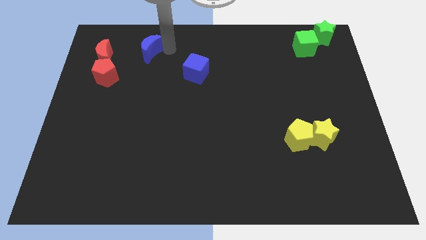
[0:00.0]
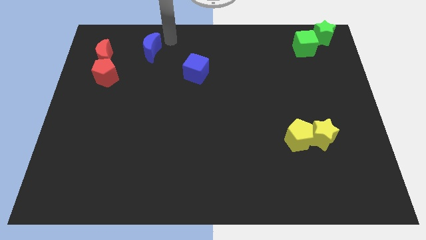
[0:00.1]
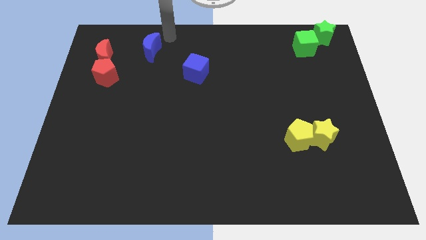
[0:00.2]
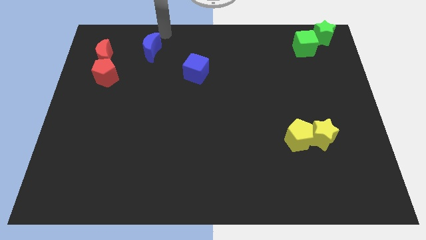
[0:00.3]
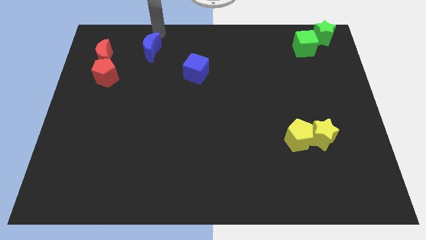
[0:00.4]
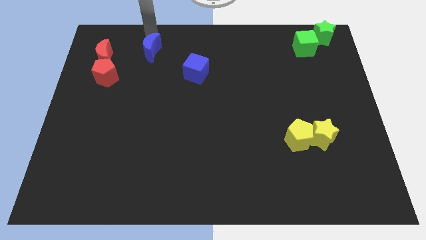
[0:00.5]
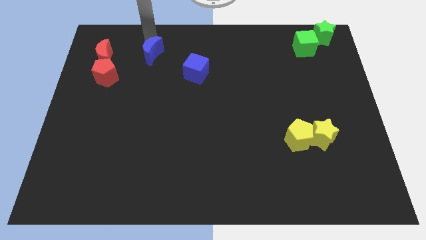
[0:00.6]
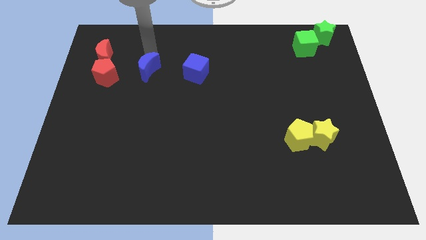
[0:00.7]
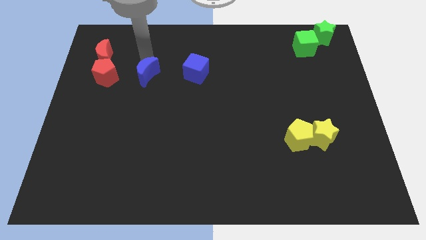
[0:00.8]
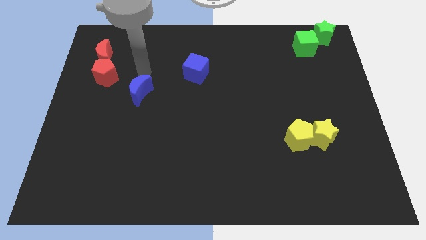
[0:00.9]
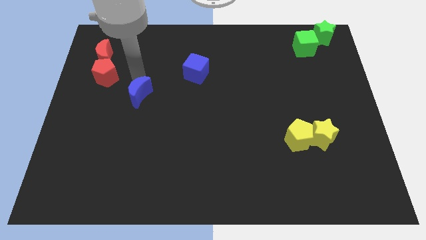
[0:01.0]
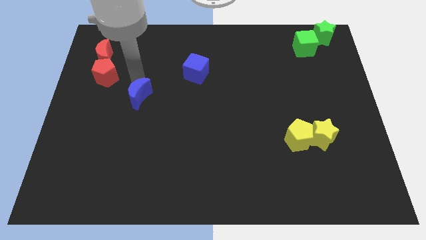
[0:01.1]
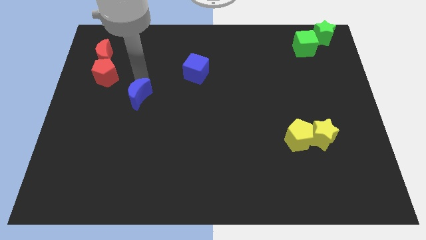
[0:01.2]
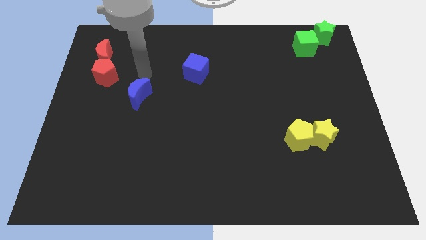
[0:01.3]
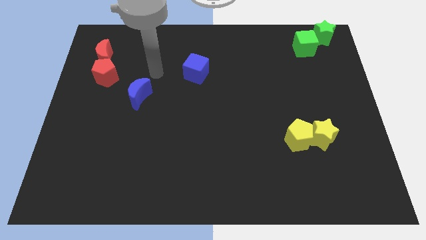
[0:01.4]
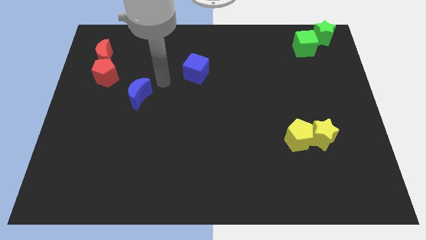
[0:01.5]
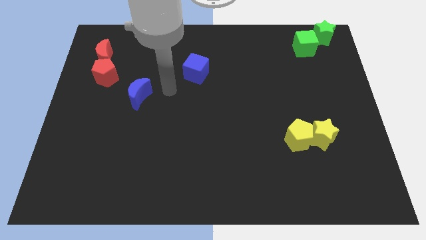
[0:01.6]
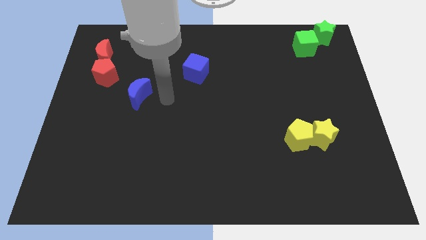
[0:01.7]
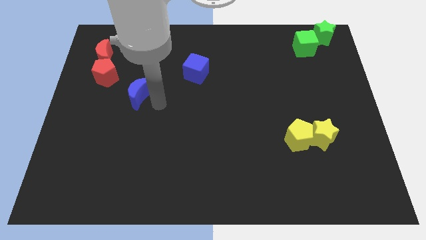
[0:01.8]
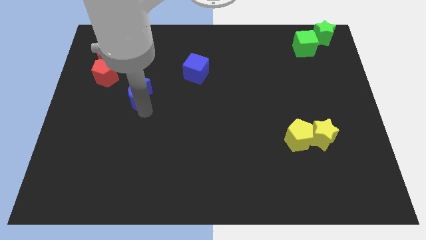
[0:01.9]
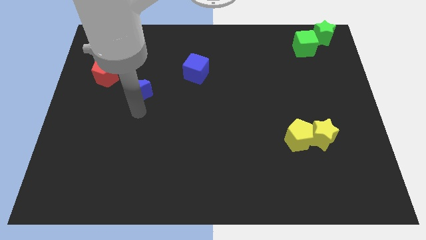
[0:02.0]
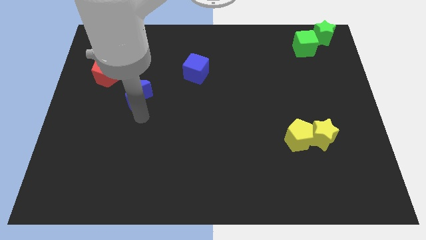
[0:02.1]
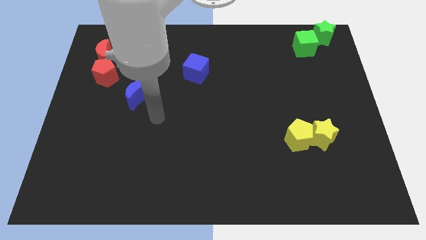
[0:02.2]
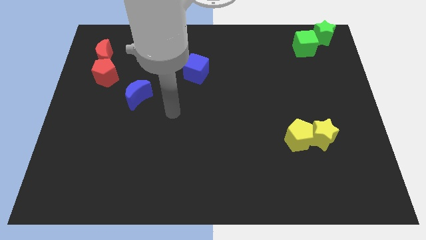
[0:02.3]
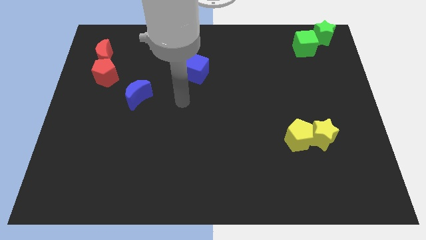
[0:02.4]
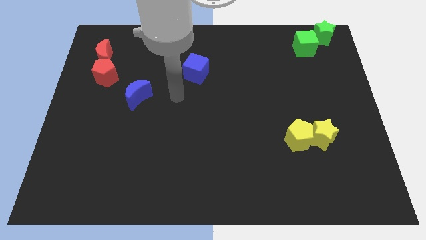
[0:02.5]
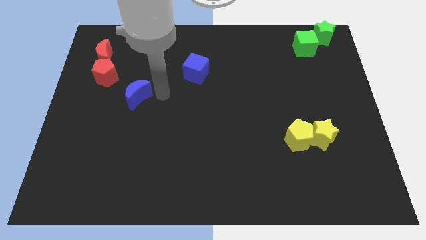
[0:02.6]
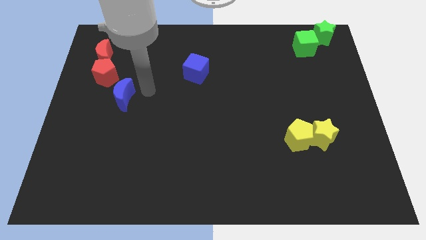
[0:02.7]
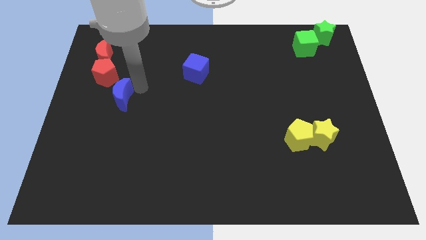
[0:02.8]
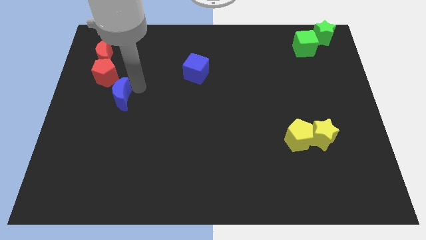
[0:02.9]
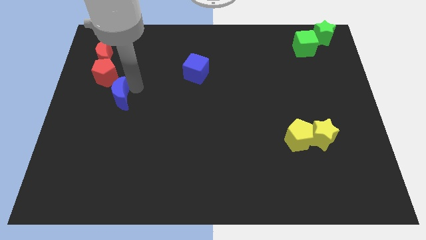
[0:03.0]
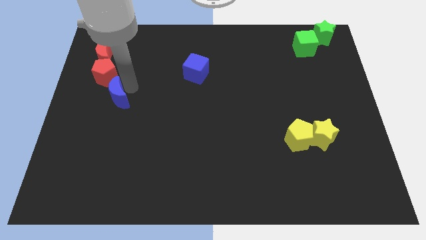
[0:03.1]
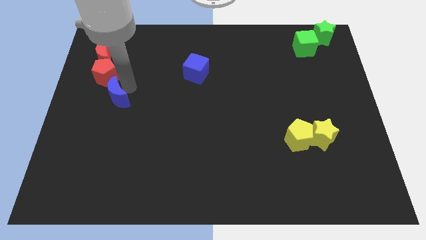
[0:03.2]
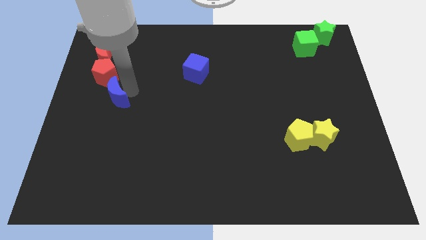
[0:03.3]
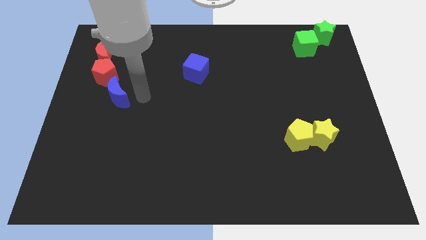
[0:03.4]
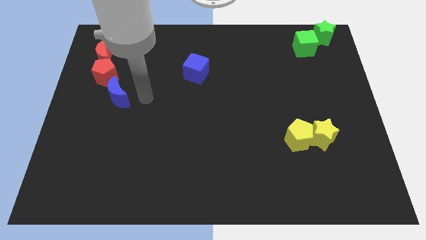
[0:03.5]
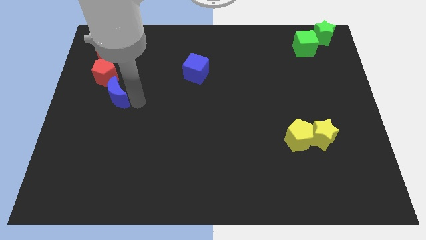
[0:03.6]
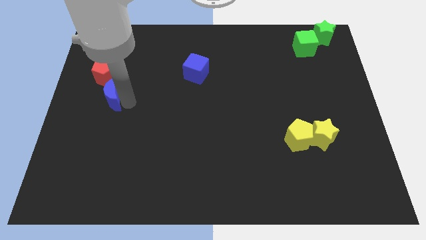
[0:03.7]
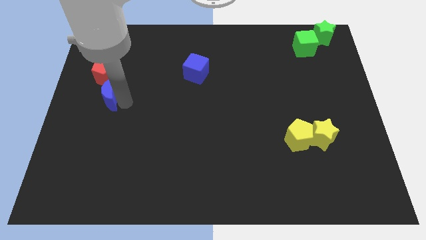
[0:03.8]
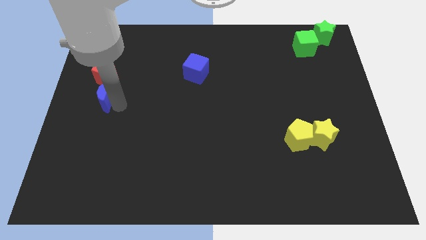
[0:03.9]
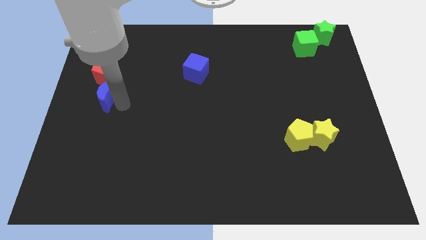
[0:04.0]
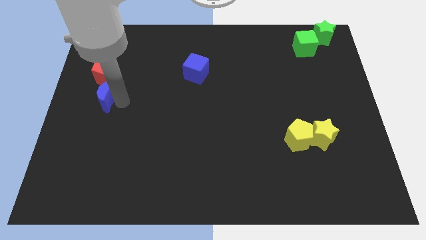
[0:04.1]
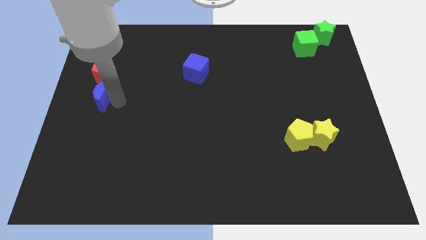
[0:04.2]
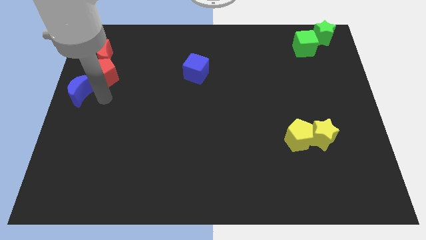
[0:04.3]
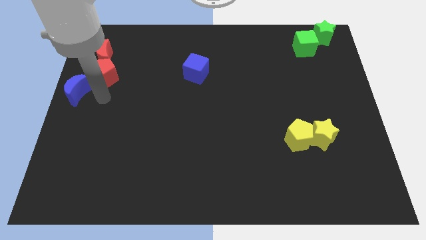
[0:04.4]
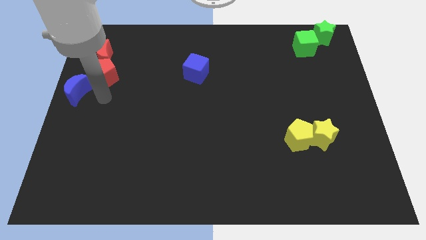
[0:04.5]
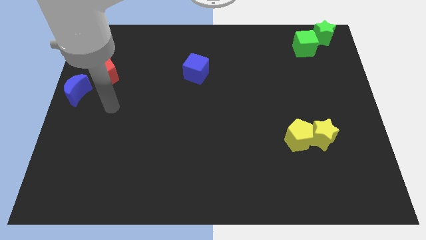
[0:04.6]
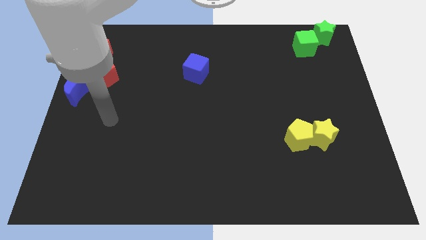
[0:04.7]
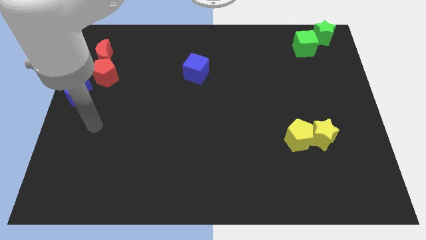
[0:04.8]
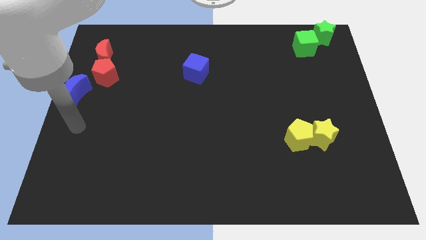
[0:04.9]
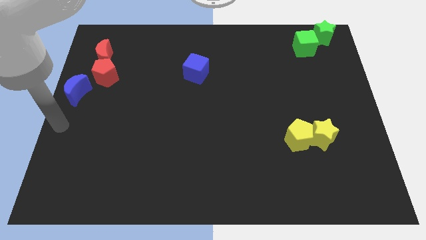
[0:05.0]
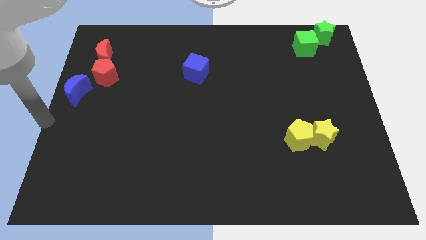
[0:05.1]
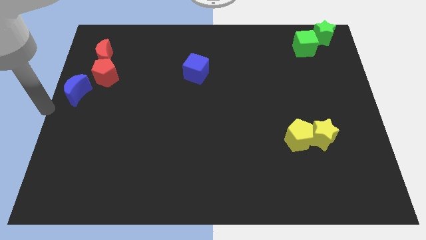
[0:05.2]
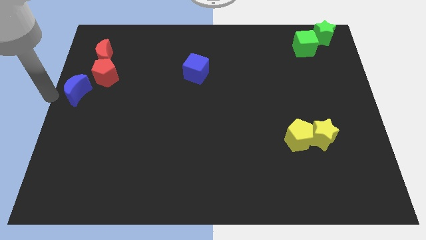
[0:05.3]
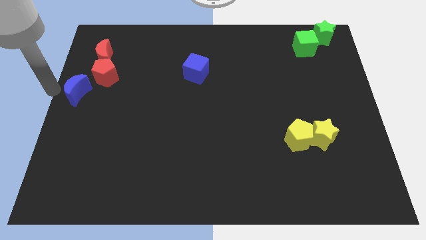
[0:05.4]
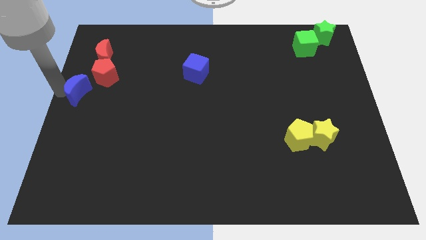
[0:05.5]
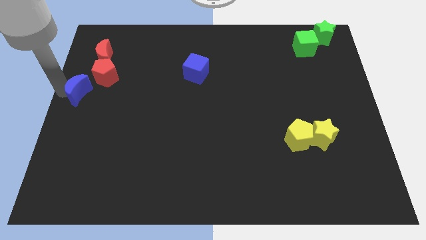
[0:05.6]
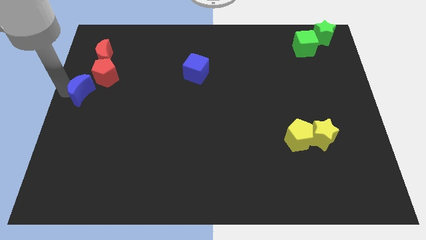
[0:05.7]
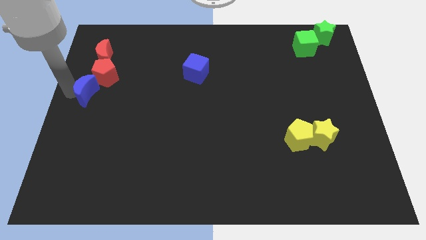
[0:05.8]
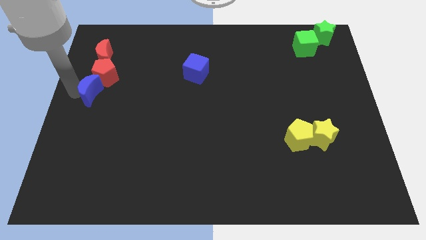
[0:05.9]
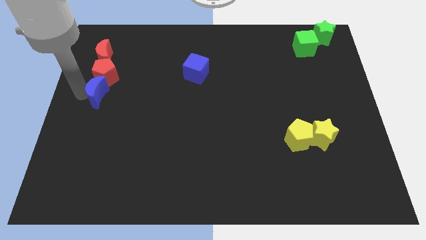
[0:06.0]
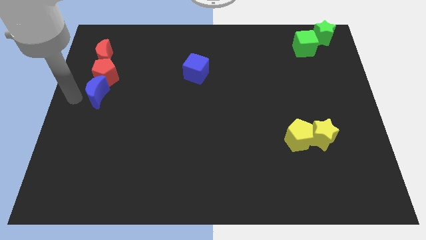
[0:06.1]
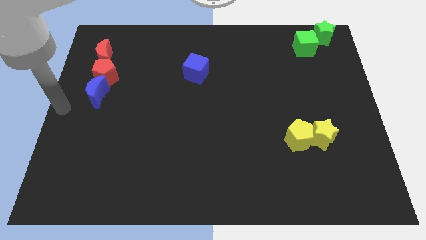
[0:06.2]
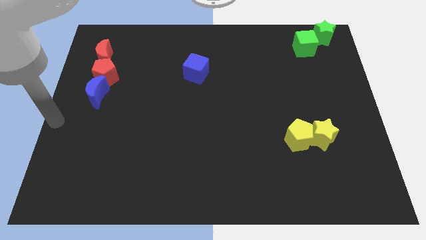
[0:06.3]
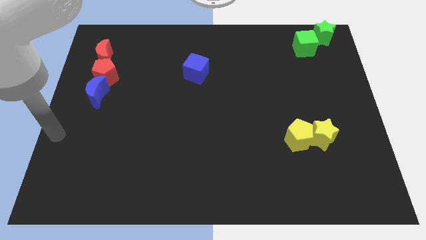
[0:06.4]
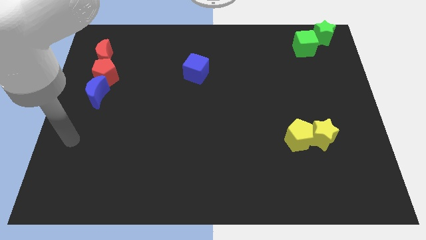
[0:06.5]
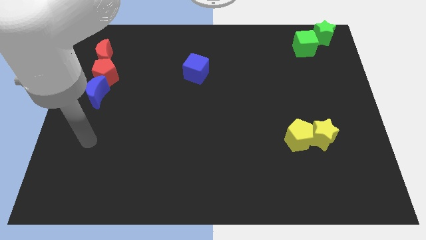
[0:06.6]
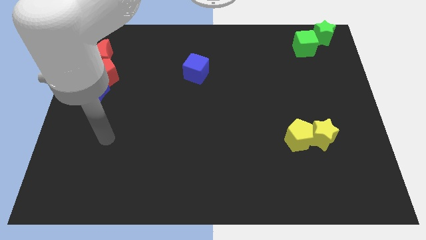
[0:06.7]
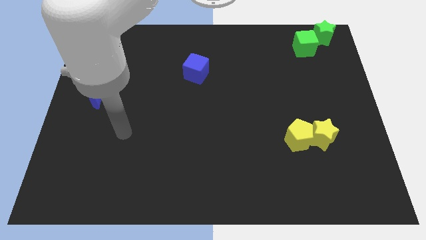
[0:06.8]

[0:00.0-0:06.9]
push the blue crescent to the bottom of the red pentagon

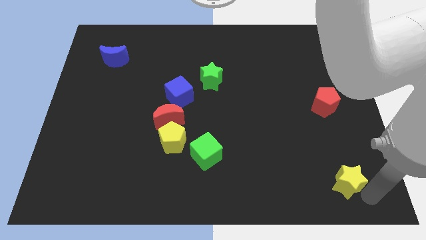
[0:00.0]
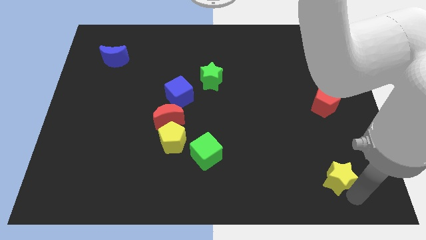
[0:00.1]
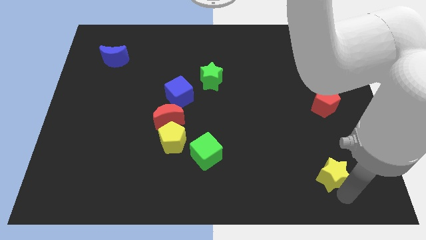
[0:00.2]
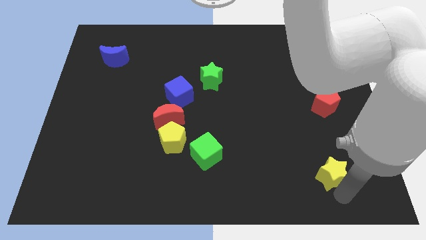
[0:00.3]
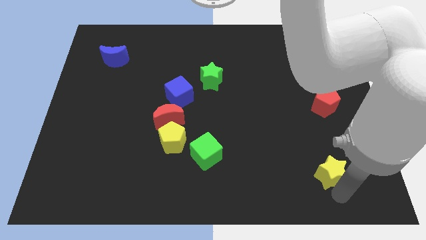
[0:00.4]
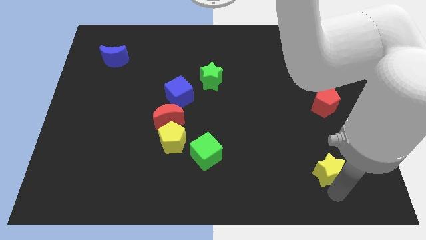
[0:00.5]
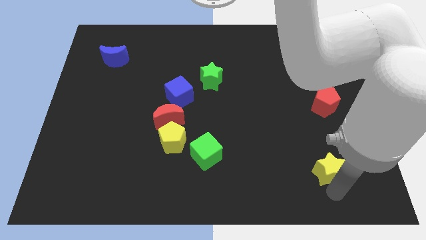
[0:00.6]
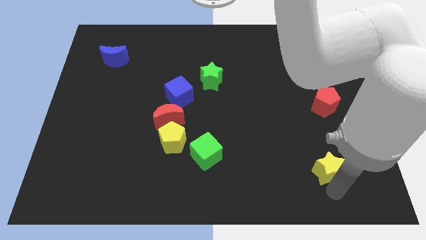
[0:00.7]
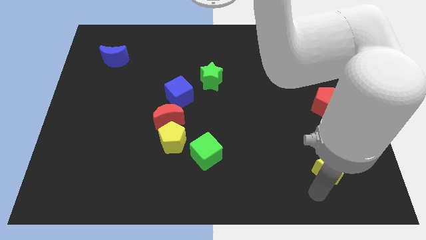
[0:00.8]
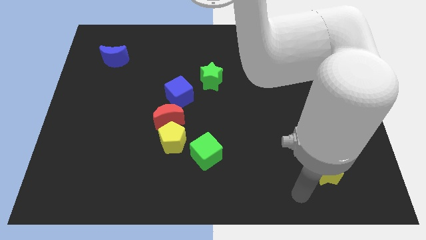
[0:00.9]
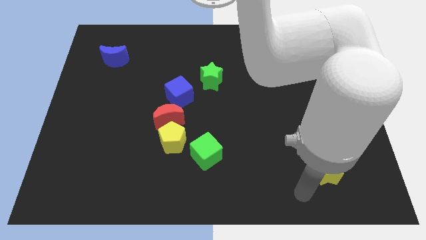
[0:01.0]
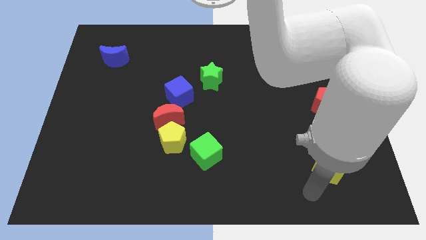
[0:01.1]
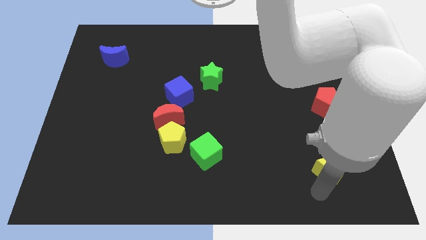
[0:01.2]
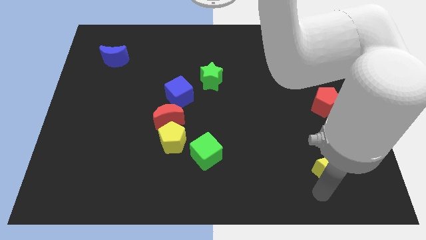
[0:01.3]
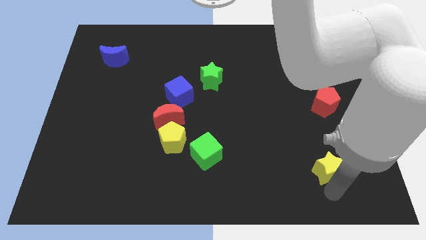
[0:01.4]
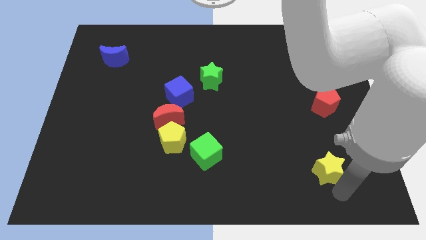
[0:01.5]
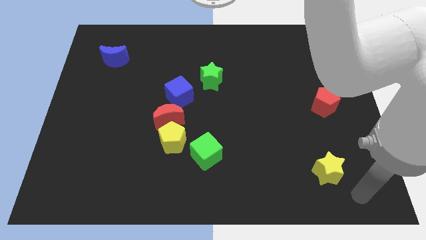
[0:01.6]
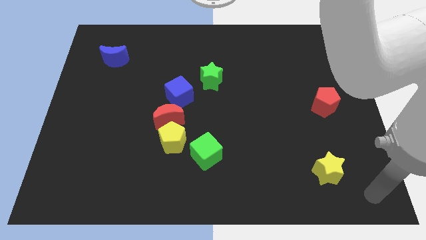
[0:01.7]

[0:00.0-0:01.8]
place the yellow star vertically below the red pentagon

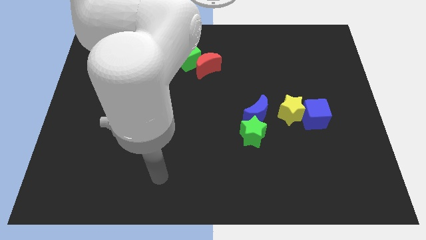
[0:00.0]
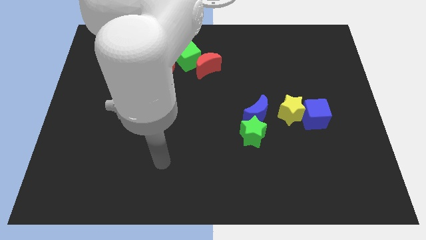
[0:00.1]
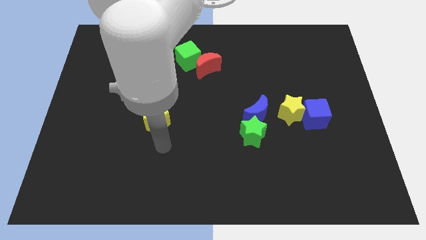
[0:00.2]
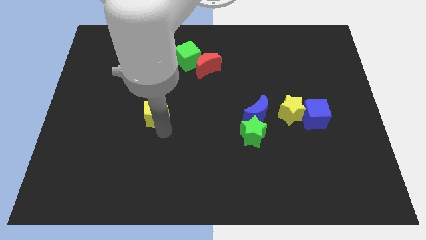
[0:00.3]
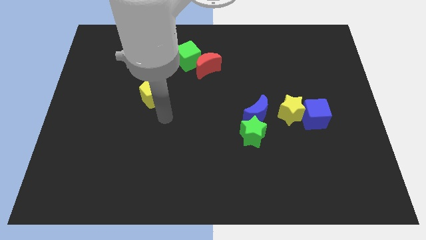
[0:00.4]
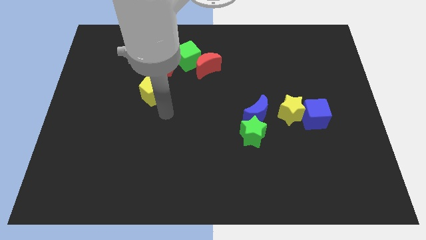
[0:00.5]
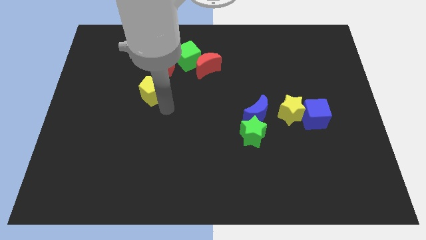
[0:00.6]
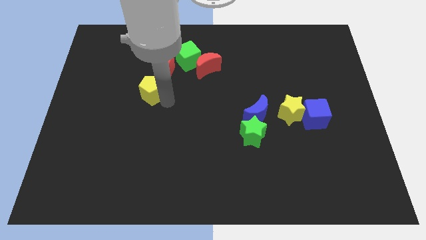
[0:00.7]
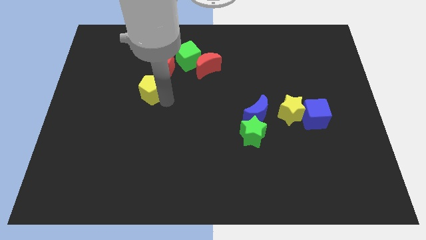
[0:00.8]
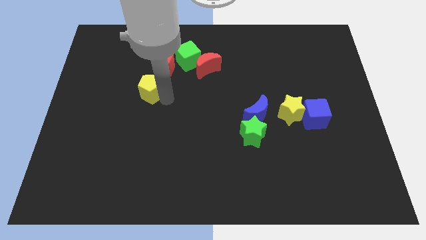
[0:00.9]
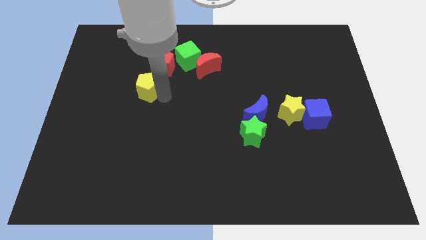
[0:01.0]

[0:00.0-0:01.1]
tap the yellow pentagon
